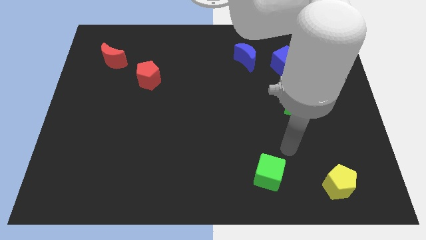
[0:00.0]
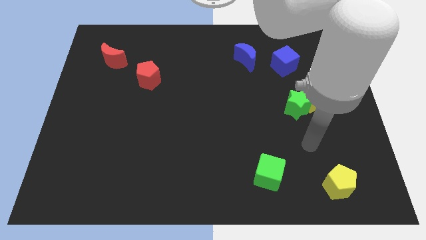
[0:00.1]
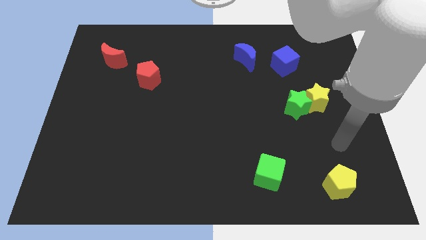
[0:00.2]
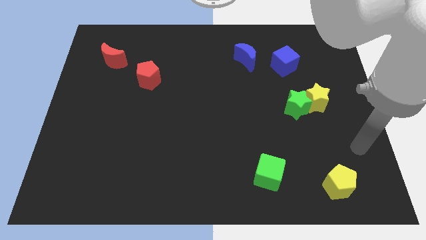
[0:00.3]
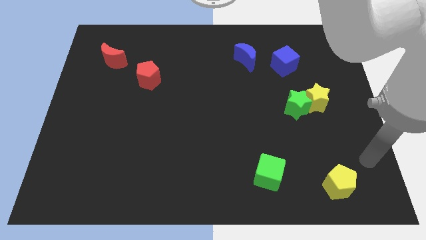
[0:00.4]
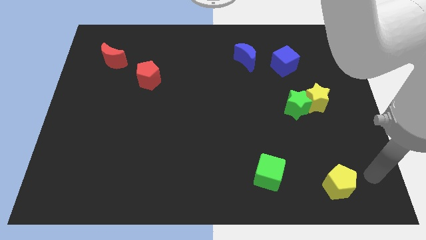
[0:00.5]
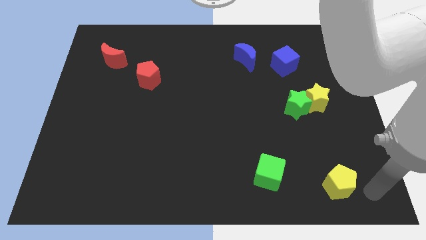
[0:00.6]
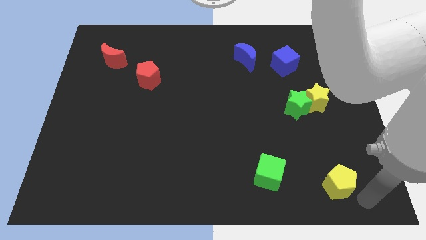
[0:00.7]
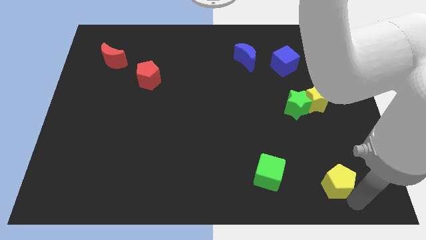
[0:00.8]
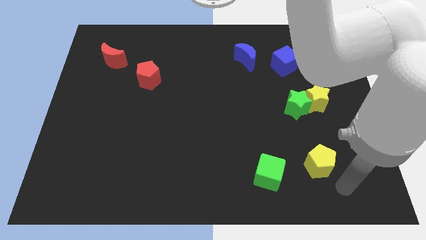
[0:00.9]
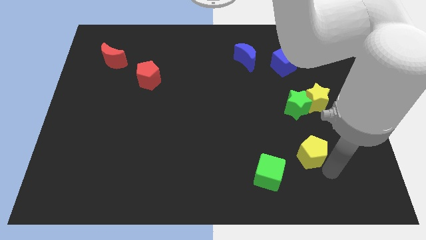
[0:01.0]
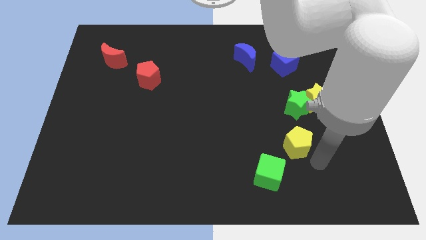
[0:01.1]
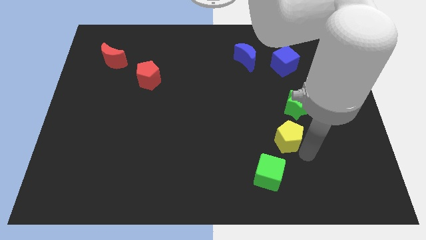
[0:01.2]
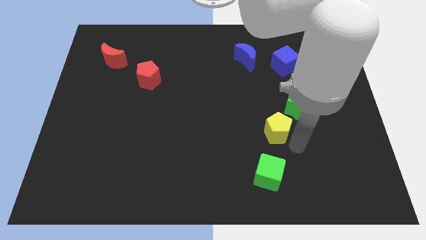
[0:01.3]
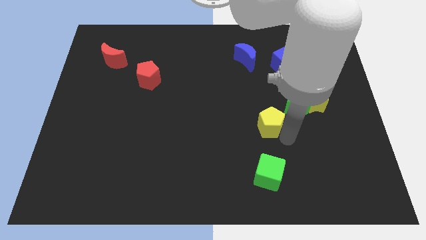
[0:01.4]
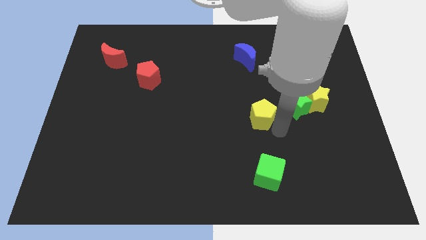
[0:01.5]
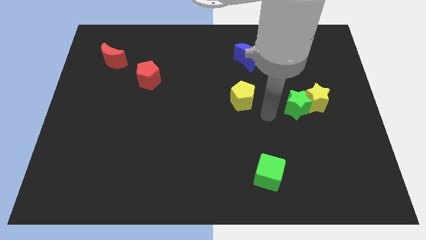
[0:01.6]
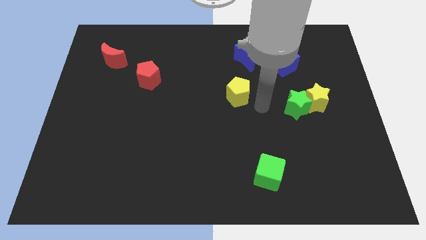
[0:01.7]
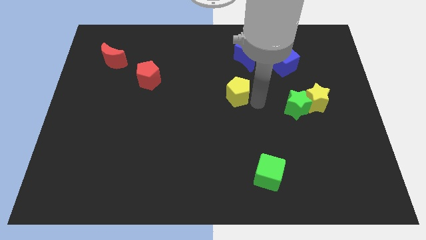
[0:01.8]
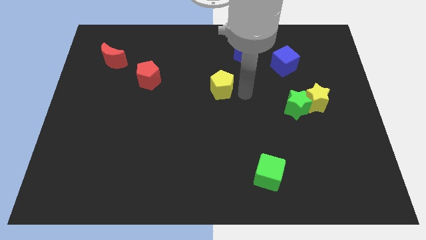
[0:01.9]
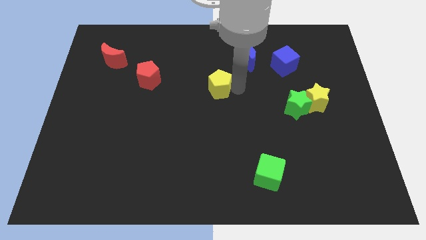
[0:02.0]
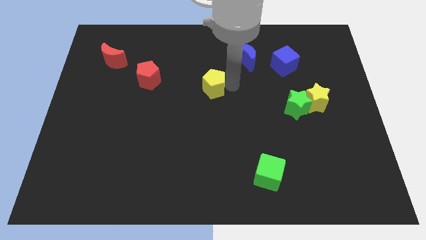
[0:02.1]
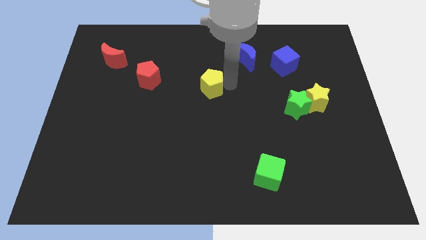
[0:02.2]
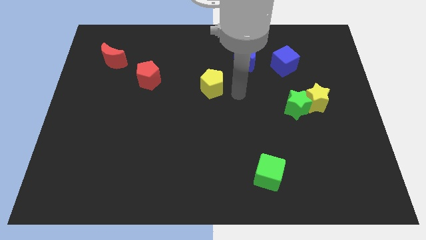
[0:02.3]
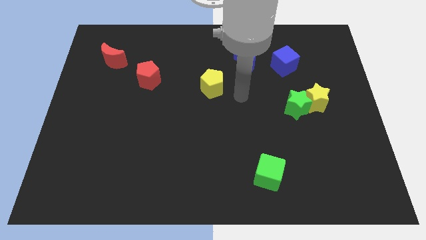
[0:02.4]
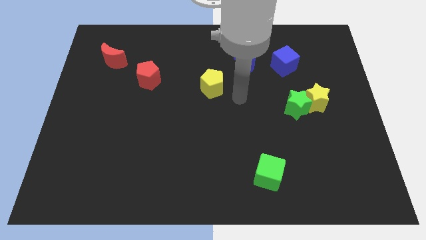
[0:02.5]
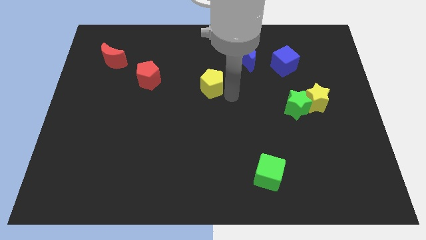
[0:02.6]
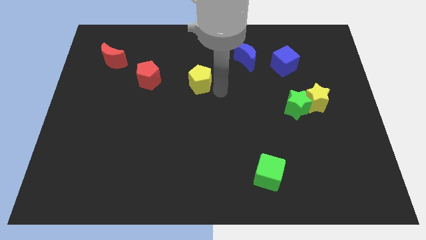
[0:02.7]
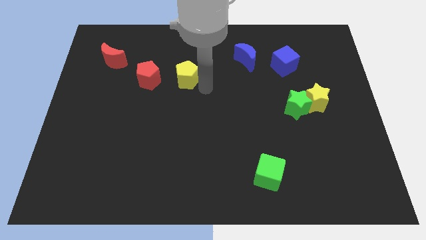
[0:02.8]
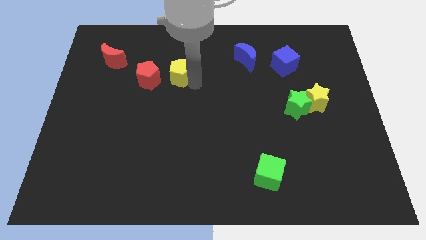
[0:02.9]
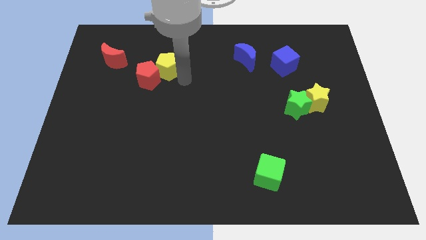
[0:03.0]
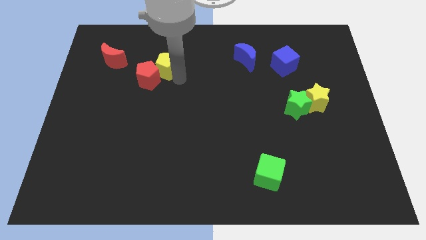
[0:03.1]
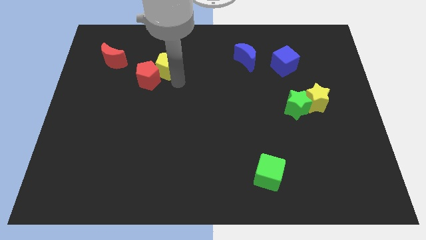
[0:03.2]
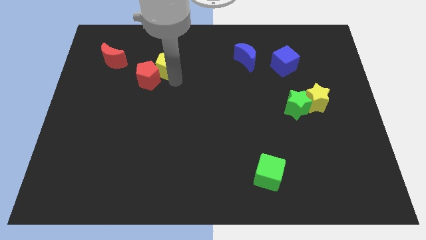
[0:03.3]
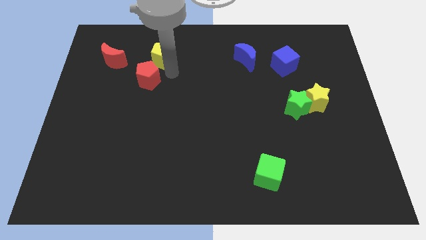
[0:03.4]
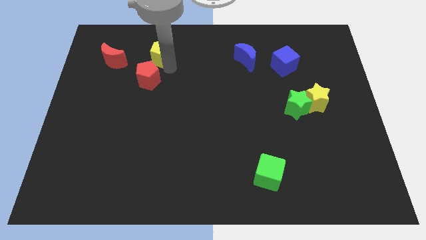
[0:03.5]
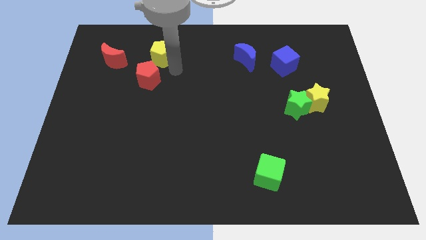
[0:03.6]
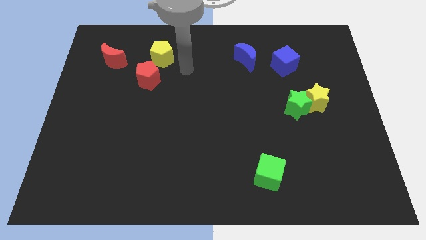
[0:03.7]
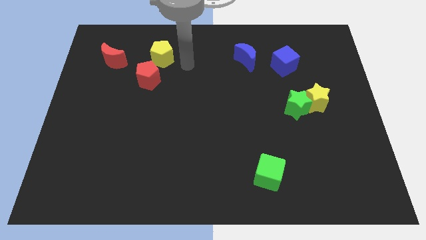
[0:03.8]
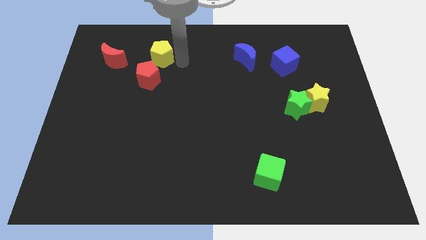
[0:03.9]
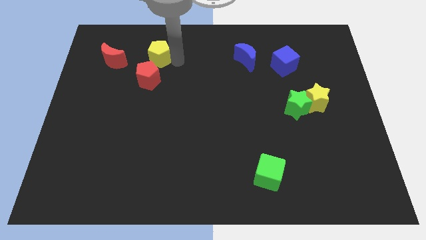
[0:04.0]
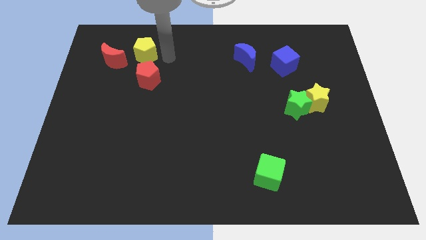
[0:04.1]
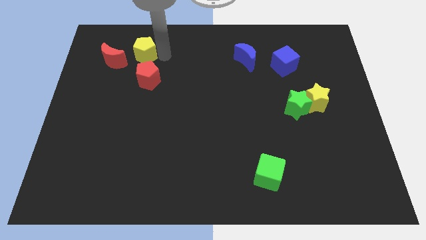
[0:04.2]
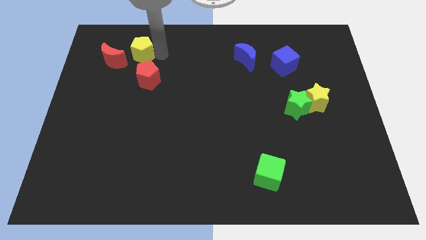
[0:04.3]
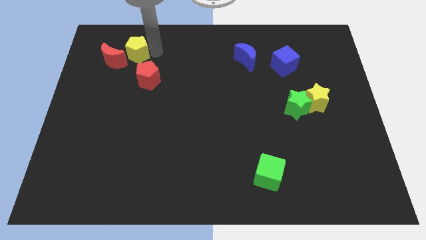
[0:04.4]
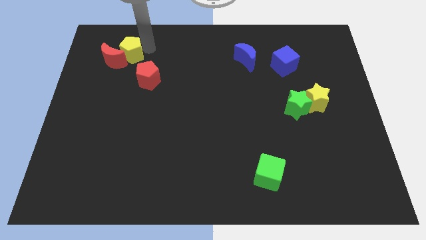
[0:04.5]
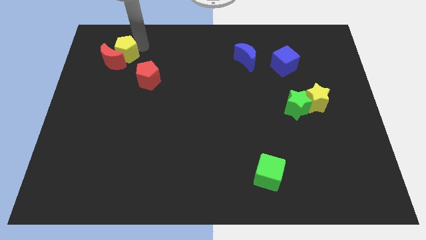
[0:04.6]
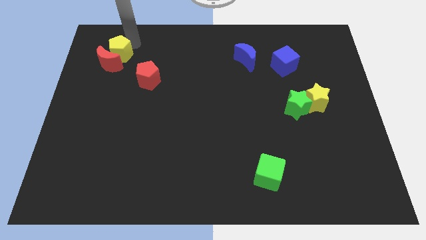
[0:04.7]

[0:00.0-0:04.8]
put the yellow pentagon close to the red moon

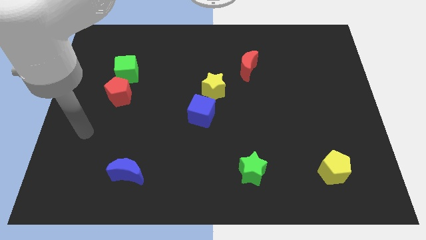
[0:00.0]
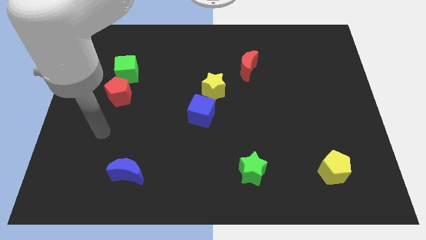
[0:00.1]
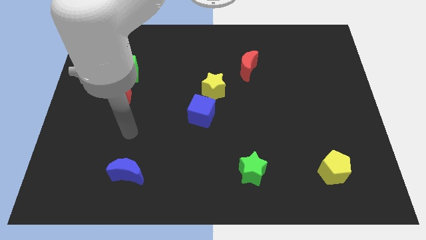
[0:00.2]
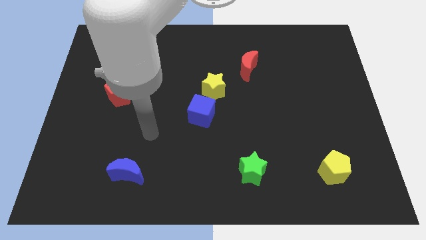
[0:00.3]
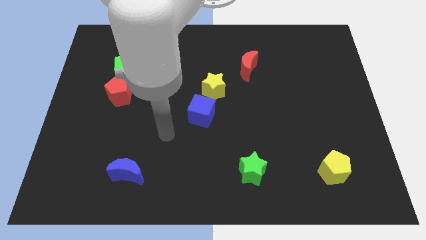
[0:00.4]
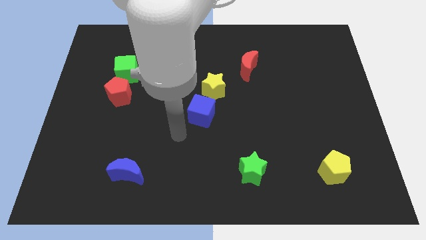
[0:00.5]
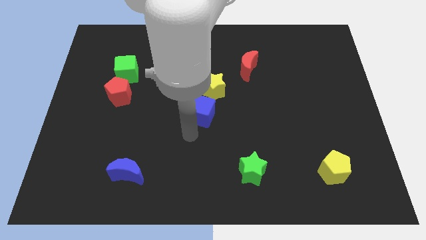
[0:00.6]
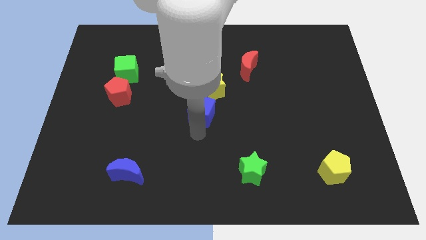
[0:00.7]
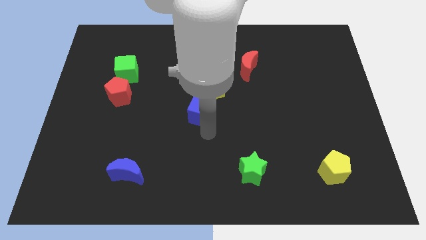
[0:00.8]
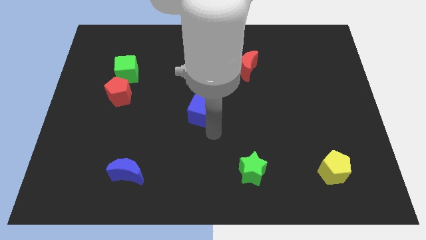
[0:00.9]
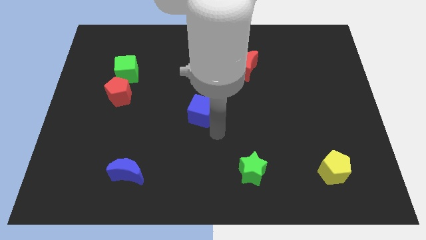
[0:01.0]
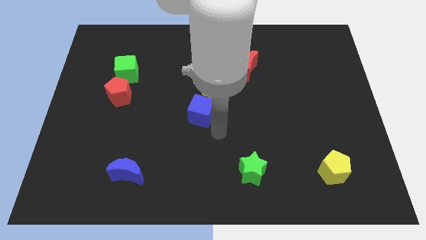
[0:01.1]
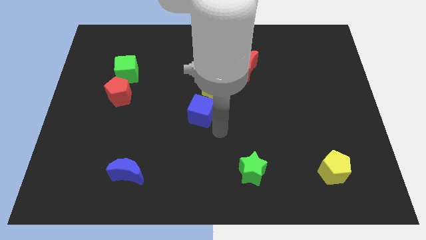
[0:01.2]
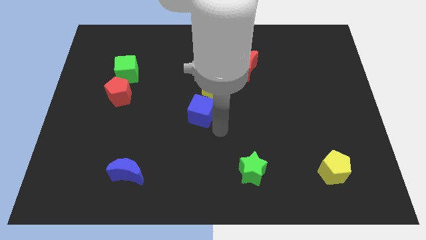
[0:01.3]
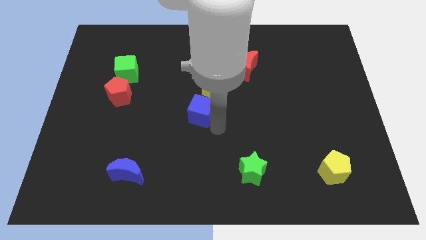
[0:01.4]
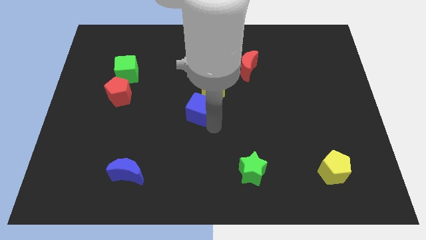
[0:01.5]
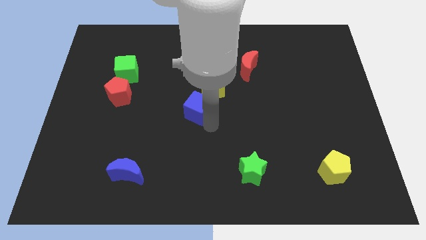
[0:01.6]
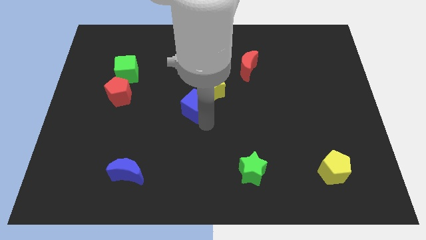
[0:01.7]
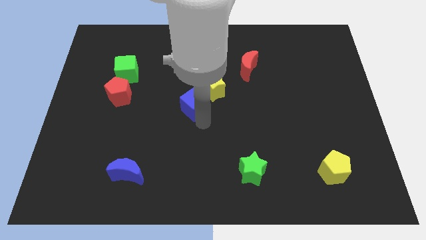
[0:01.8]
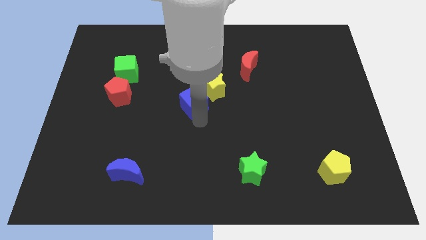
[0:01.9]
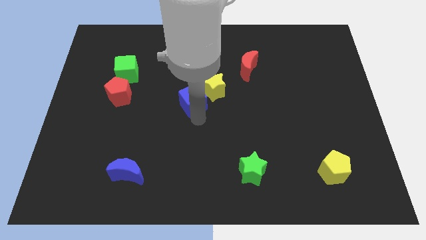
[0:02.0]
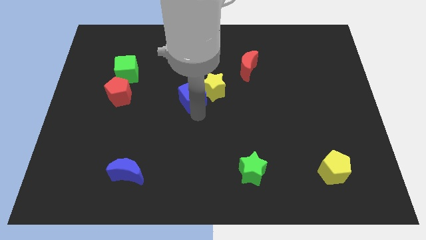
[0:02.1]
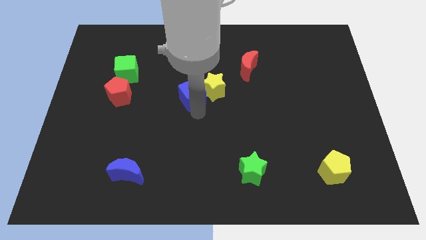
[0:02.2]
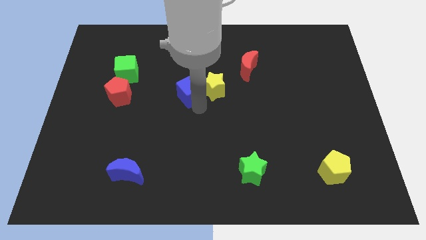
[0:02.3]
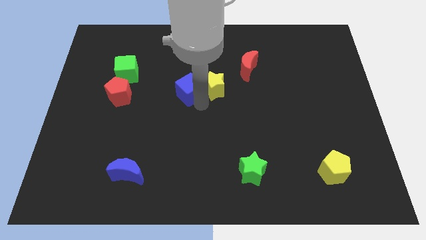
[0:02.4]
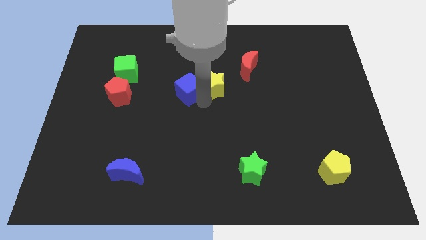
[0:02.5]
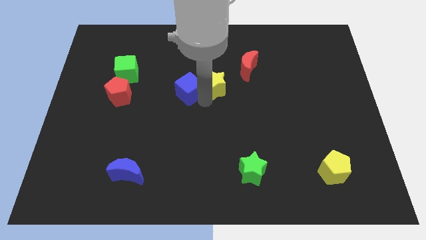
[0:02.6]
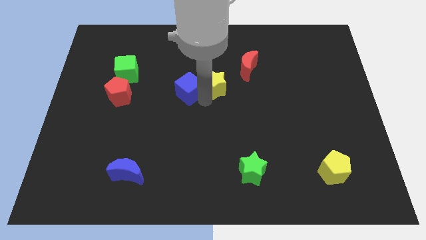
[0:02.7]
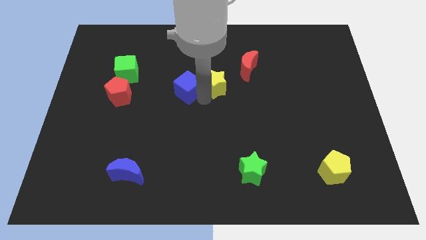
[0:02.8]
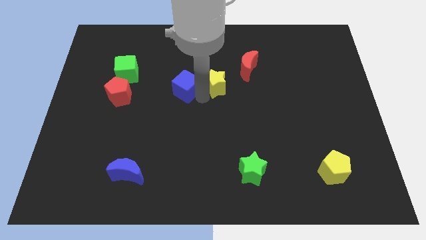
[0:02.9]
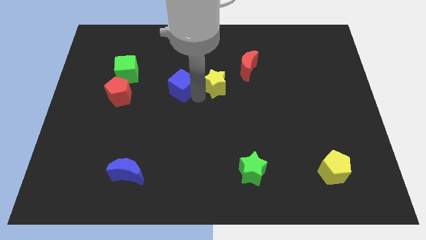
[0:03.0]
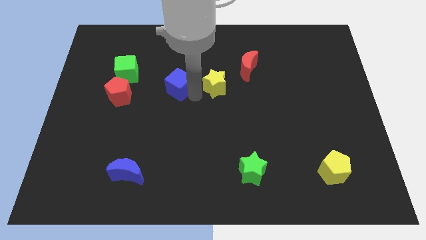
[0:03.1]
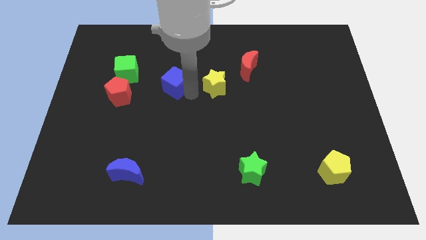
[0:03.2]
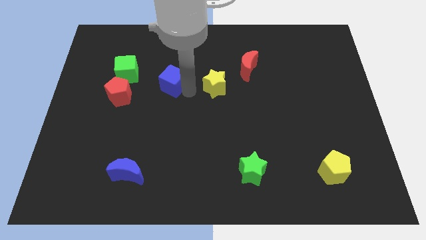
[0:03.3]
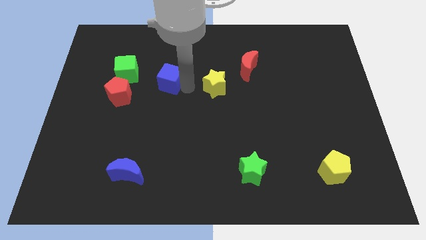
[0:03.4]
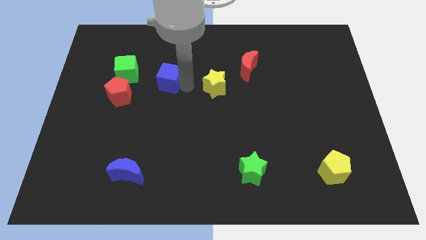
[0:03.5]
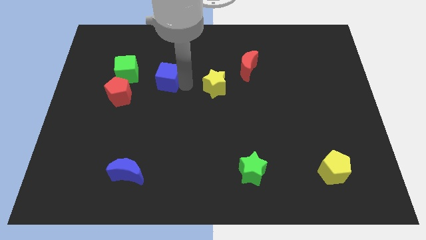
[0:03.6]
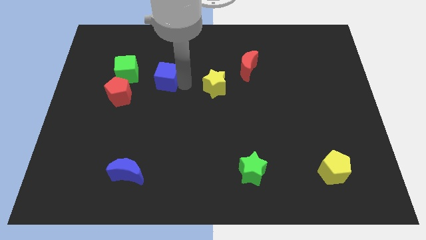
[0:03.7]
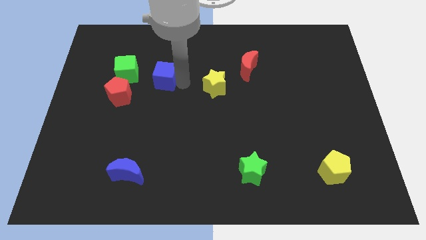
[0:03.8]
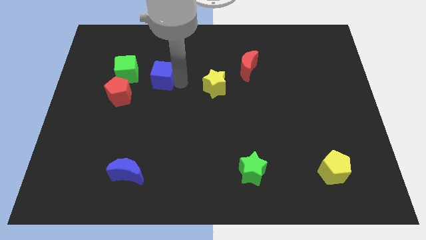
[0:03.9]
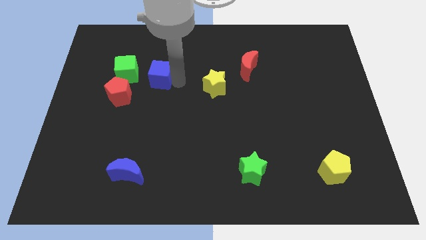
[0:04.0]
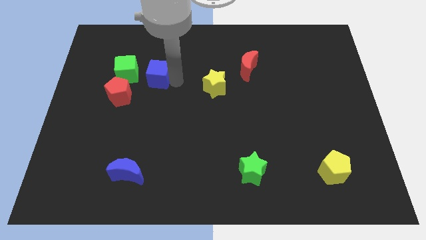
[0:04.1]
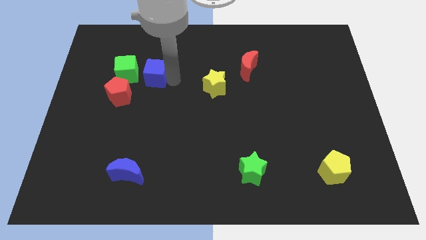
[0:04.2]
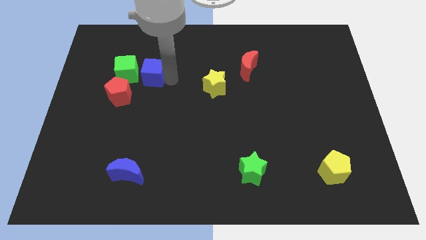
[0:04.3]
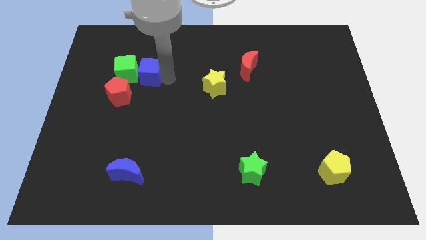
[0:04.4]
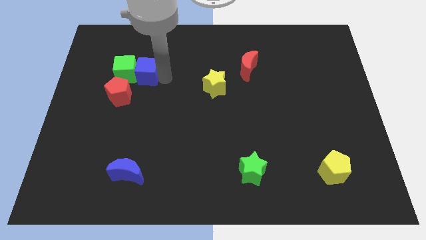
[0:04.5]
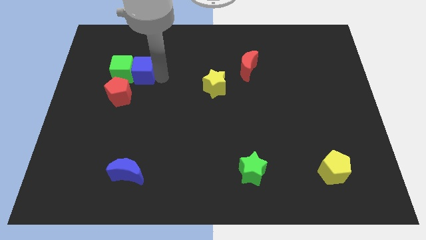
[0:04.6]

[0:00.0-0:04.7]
put the blue cube to the green cube
